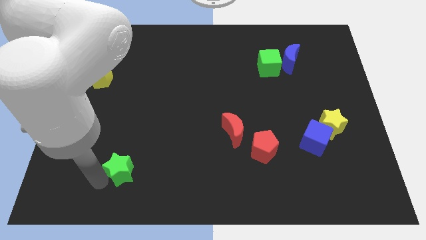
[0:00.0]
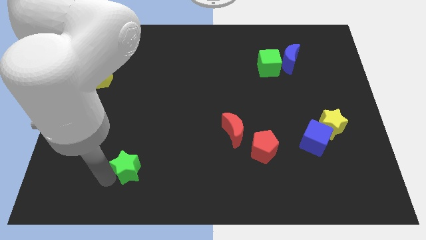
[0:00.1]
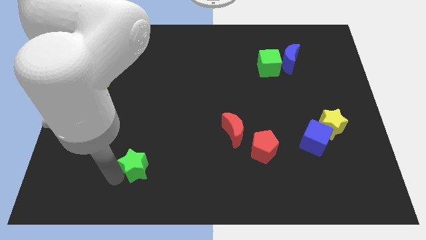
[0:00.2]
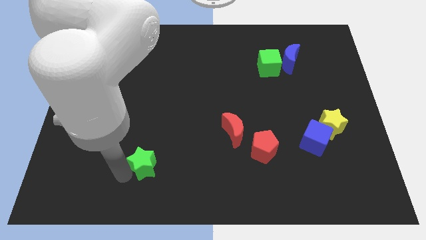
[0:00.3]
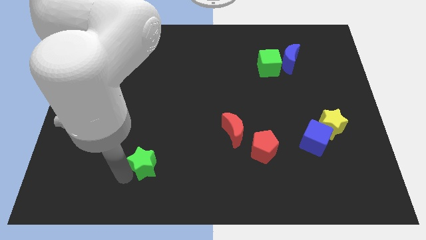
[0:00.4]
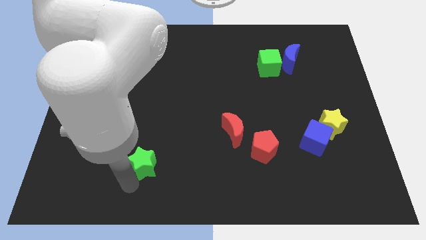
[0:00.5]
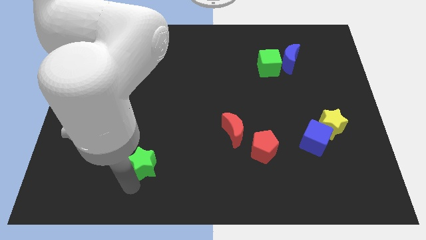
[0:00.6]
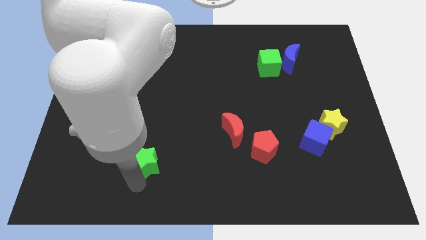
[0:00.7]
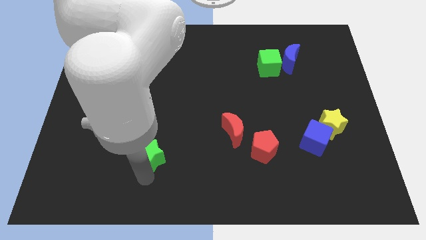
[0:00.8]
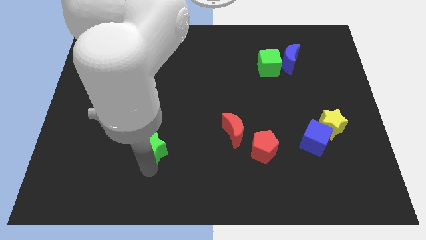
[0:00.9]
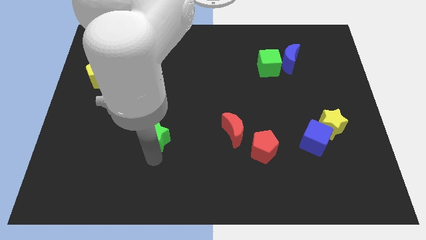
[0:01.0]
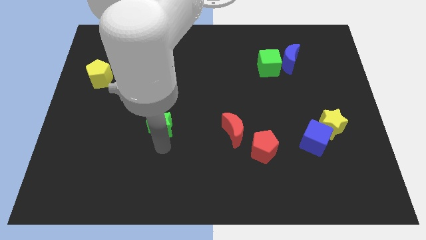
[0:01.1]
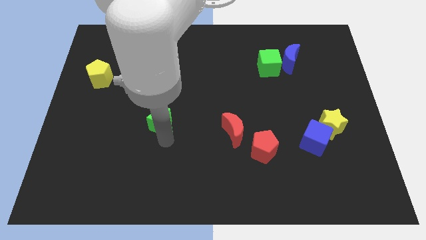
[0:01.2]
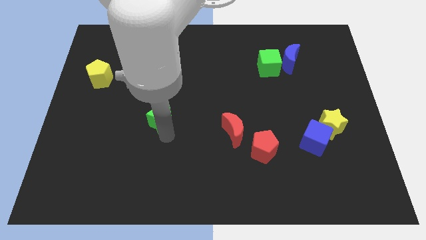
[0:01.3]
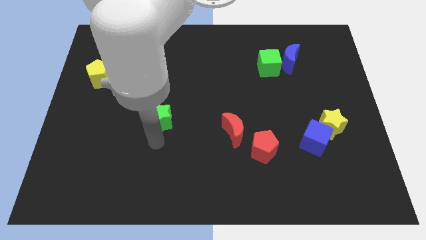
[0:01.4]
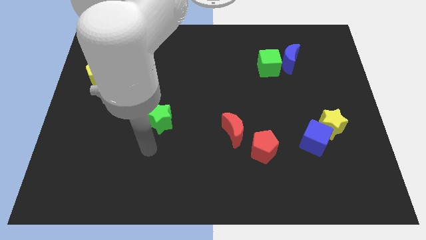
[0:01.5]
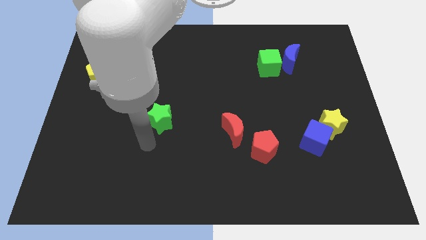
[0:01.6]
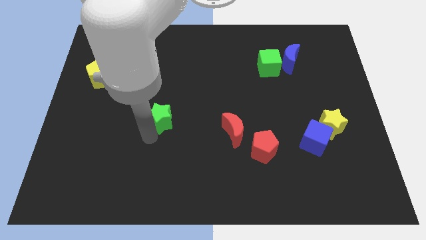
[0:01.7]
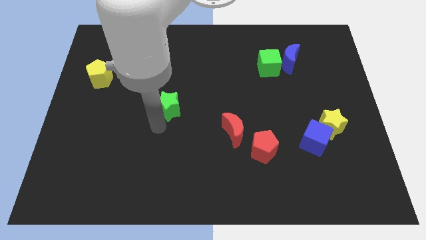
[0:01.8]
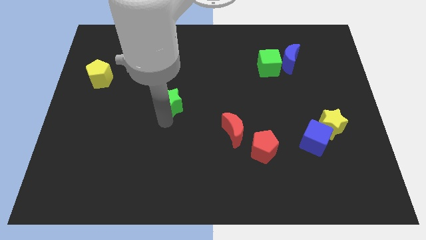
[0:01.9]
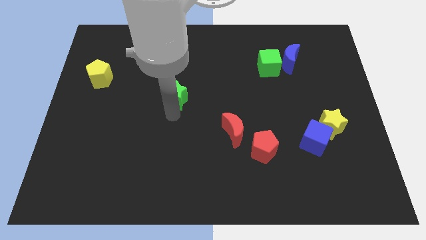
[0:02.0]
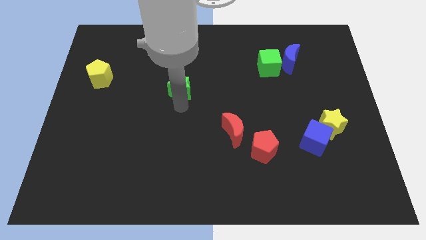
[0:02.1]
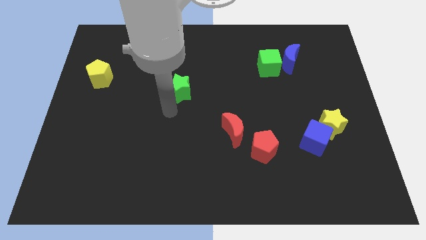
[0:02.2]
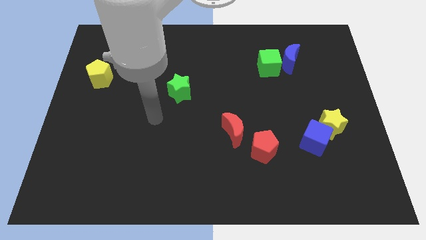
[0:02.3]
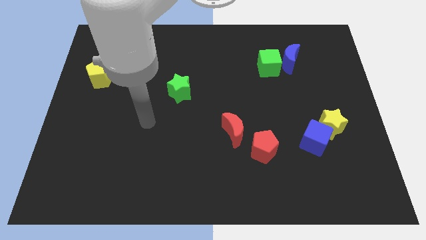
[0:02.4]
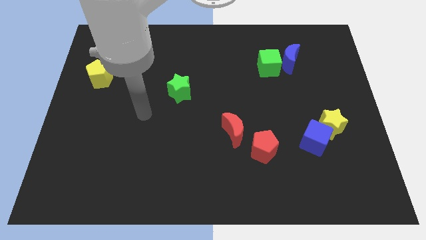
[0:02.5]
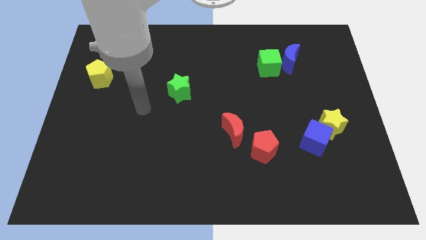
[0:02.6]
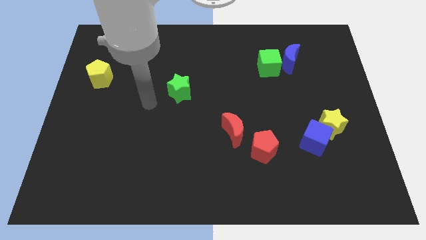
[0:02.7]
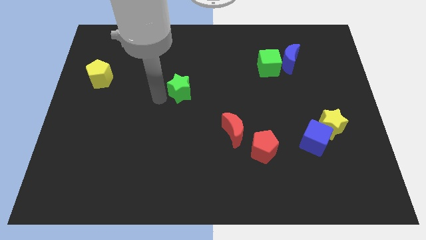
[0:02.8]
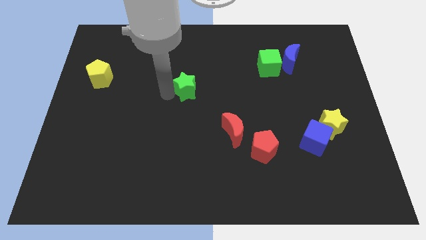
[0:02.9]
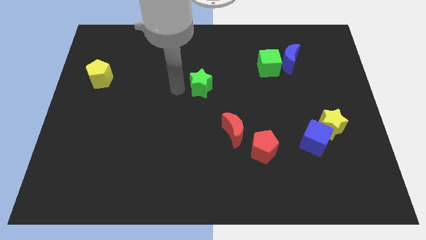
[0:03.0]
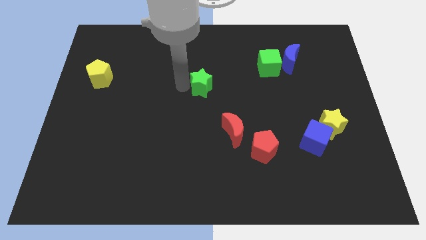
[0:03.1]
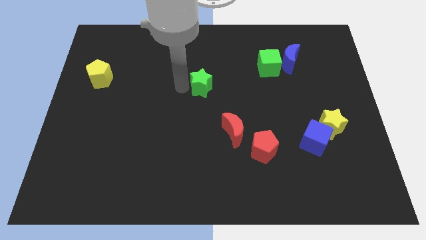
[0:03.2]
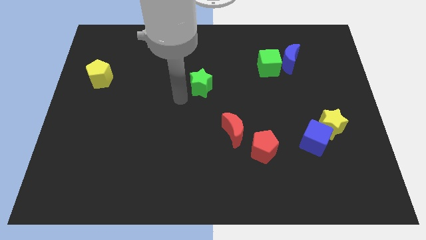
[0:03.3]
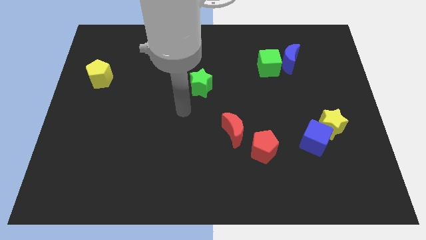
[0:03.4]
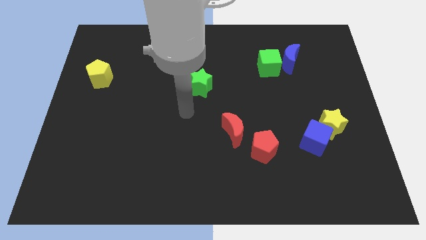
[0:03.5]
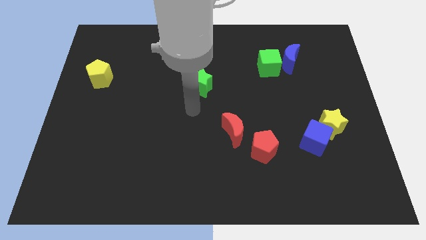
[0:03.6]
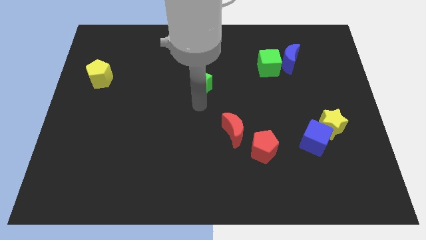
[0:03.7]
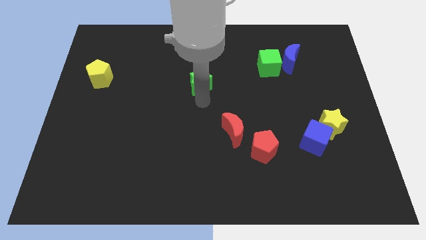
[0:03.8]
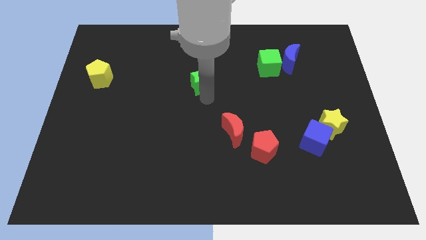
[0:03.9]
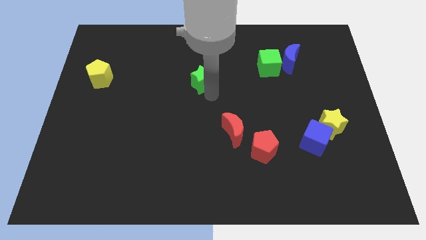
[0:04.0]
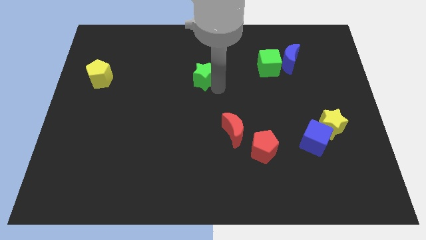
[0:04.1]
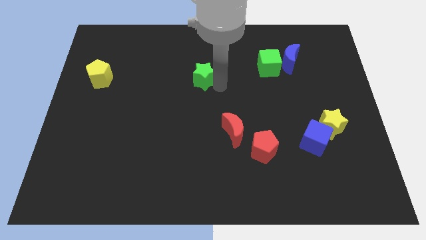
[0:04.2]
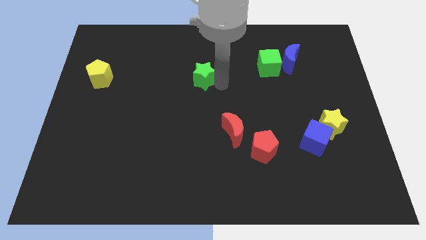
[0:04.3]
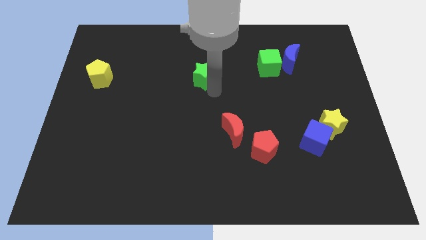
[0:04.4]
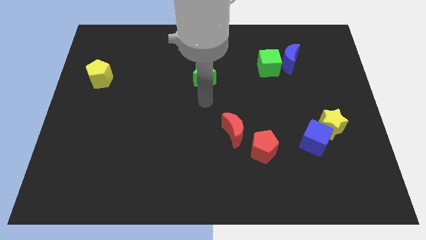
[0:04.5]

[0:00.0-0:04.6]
place the green star towards left of the green cube

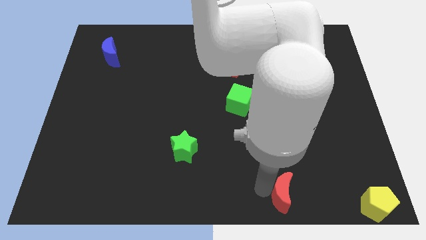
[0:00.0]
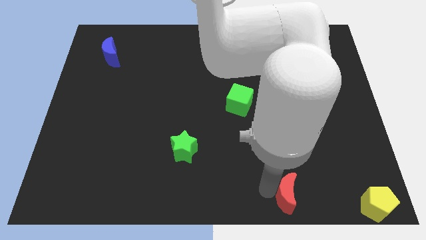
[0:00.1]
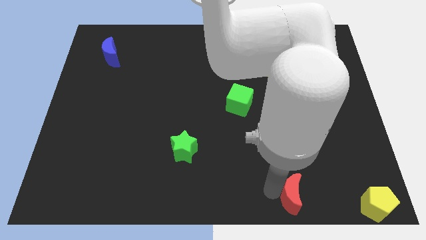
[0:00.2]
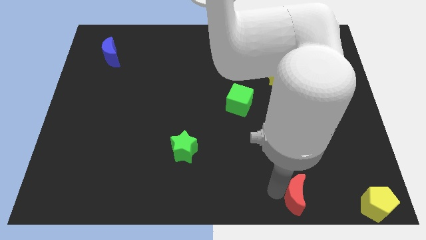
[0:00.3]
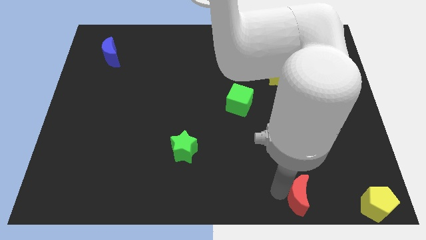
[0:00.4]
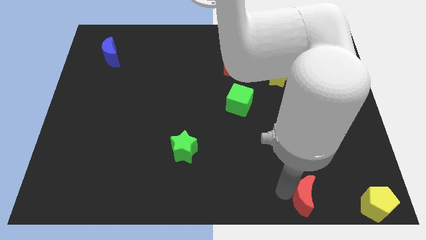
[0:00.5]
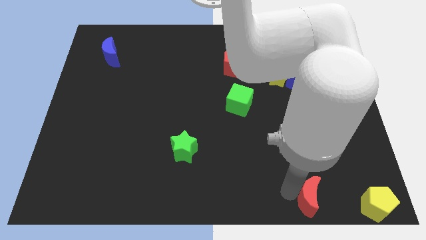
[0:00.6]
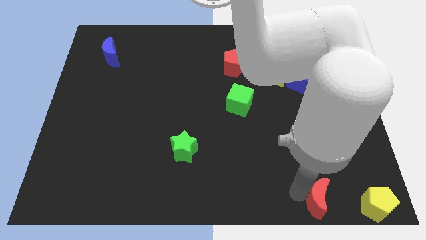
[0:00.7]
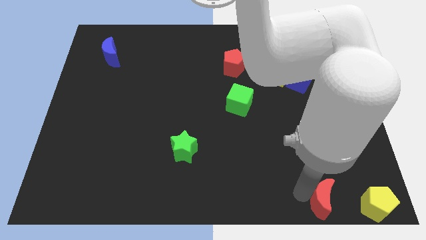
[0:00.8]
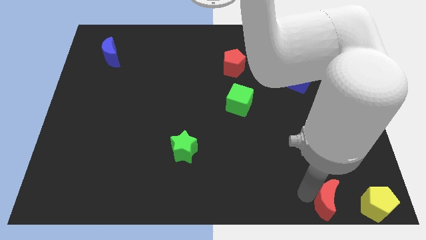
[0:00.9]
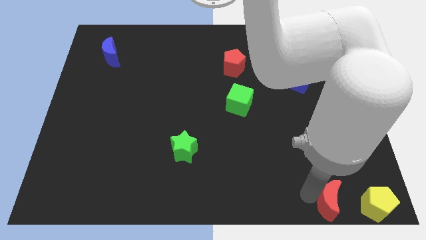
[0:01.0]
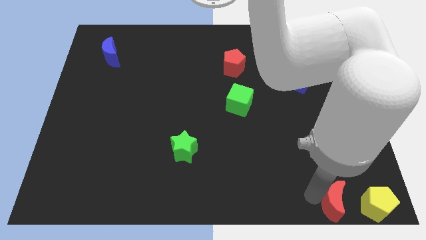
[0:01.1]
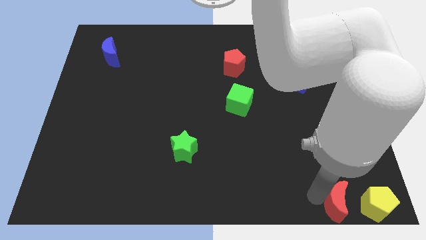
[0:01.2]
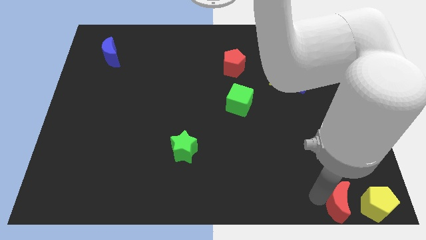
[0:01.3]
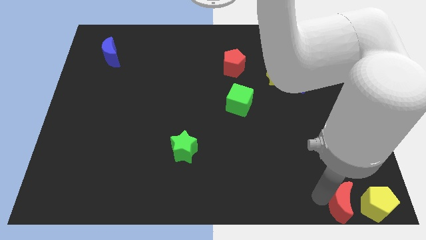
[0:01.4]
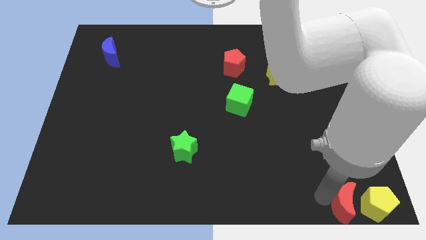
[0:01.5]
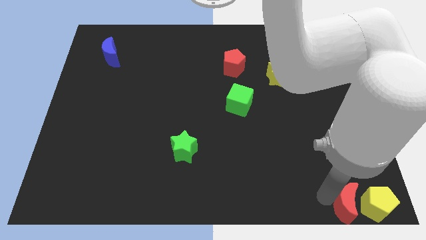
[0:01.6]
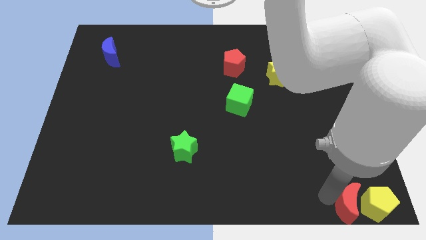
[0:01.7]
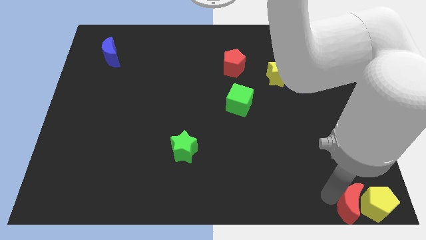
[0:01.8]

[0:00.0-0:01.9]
place the red moon to the left of the yellow pentagon

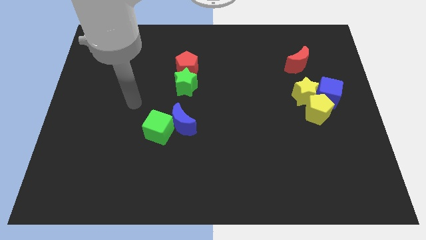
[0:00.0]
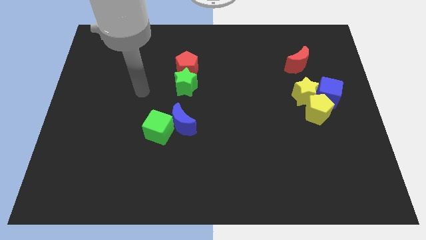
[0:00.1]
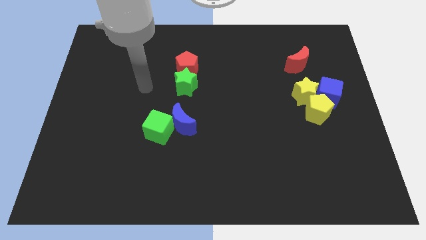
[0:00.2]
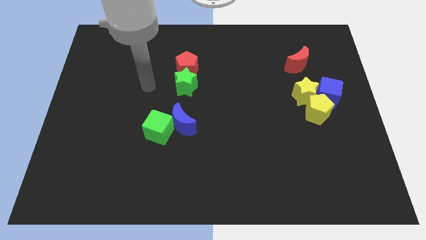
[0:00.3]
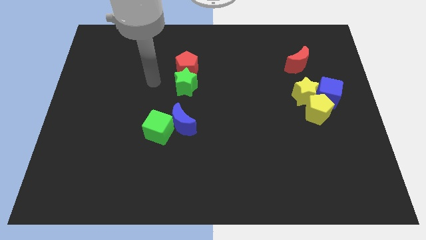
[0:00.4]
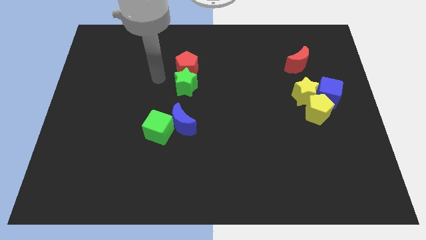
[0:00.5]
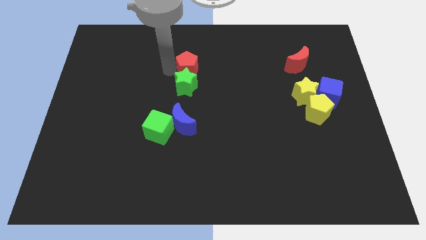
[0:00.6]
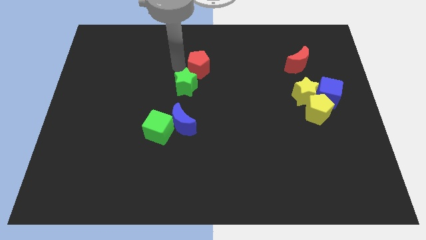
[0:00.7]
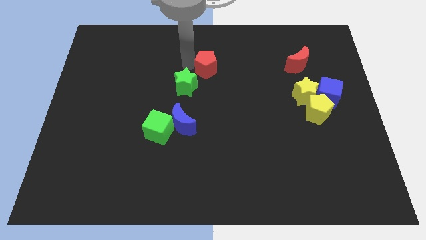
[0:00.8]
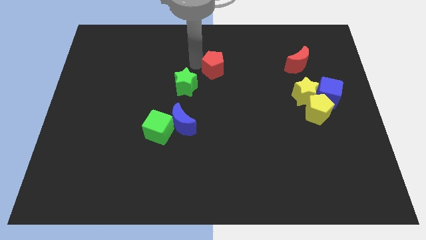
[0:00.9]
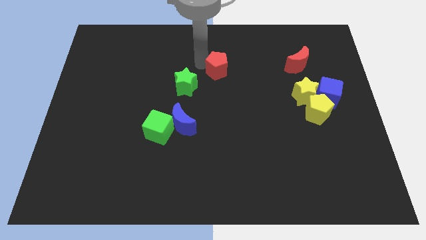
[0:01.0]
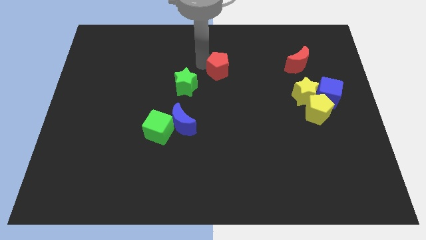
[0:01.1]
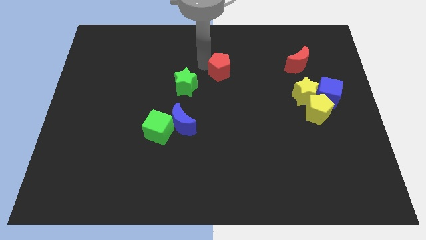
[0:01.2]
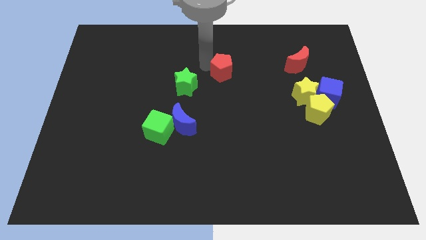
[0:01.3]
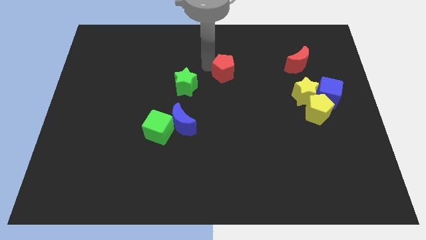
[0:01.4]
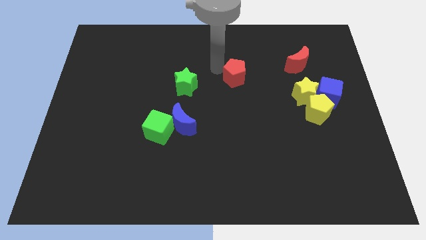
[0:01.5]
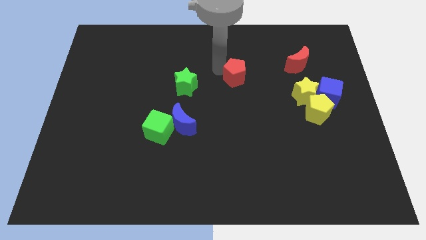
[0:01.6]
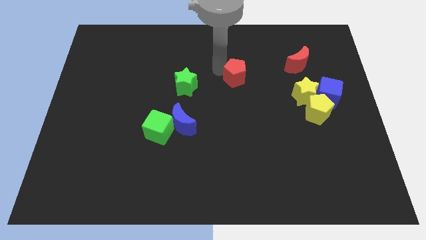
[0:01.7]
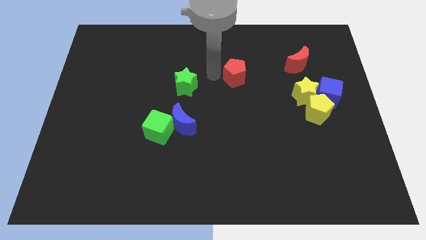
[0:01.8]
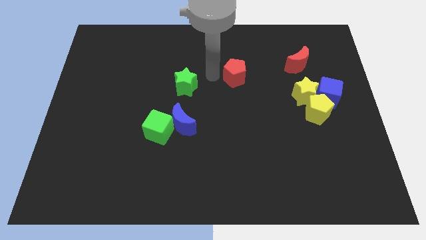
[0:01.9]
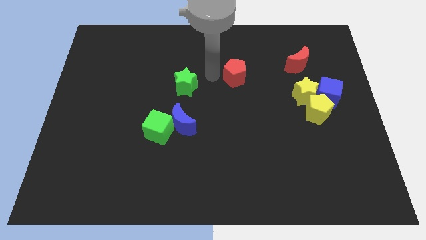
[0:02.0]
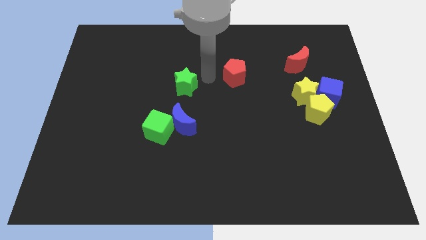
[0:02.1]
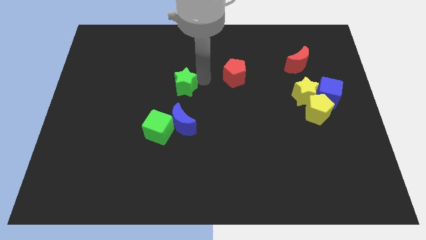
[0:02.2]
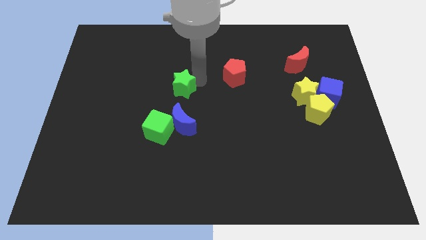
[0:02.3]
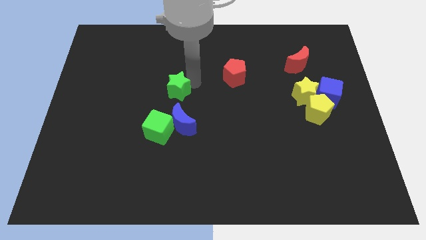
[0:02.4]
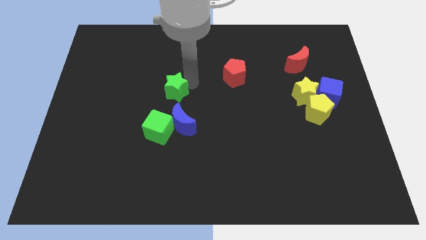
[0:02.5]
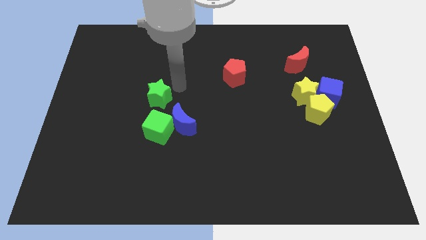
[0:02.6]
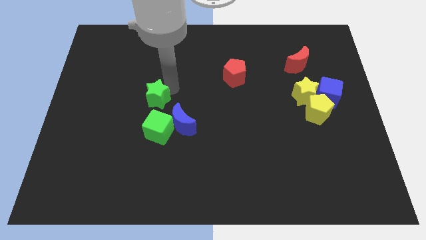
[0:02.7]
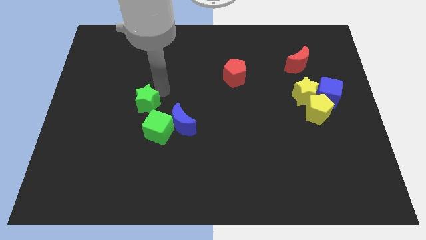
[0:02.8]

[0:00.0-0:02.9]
separate red pentagon and green star from each other
